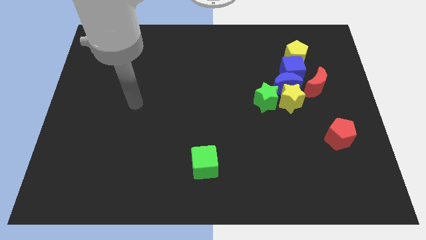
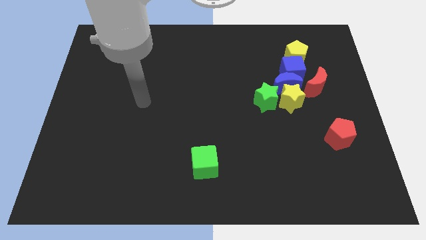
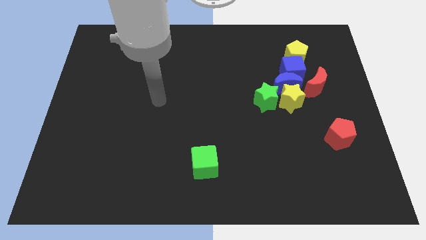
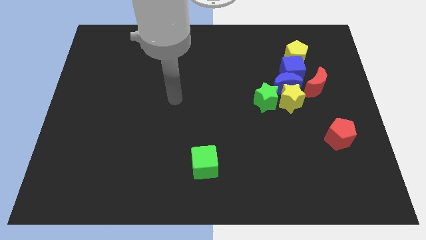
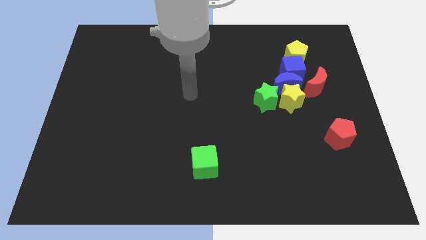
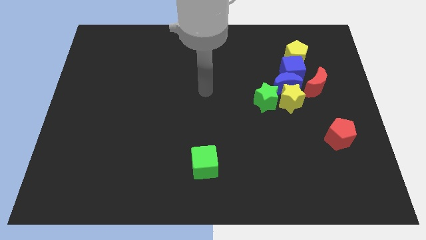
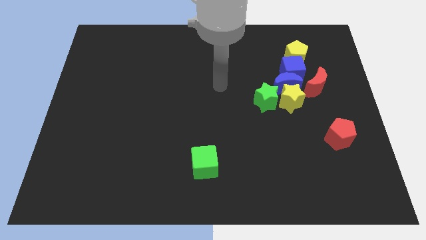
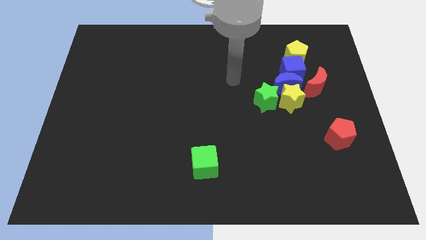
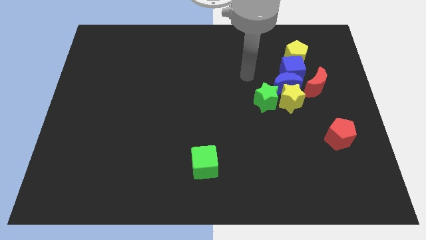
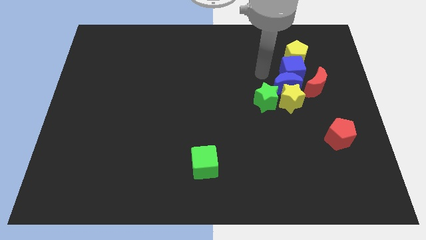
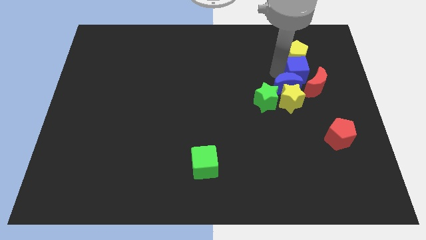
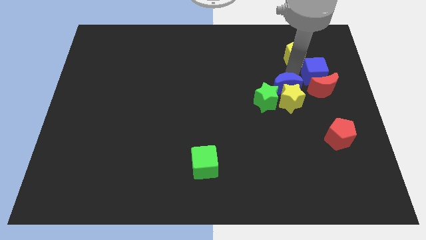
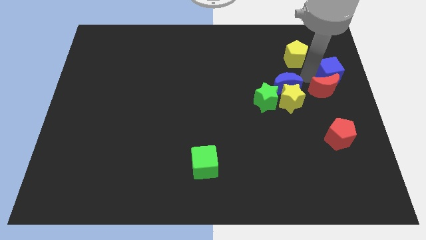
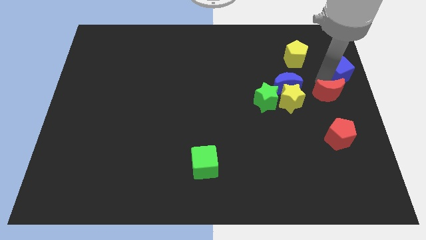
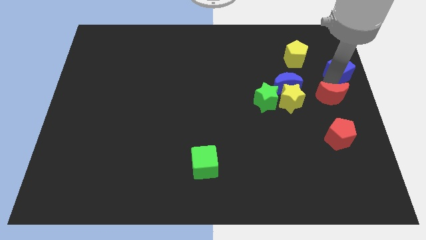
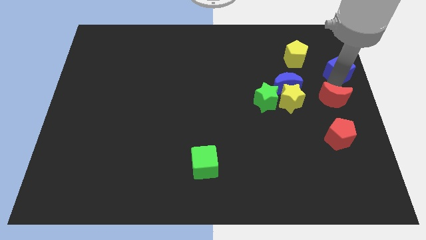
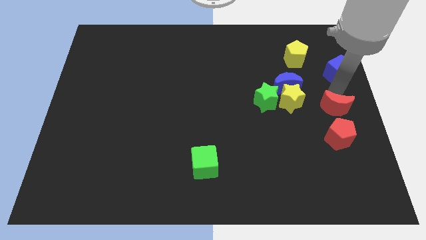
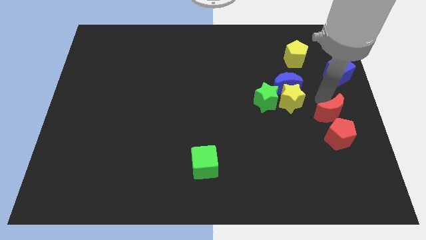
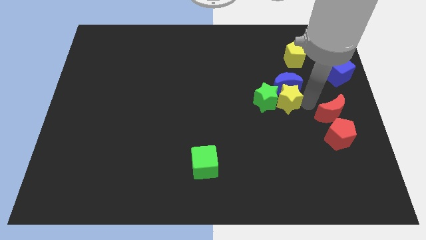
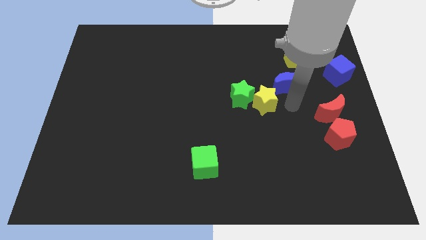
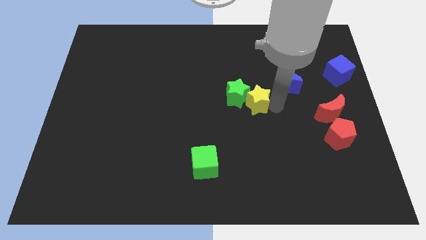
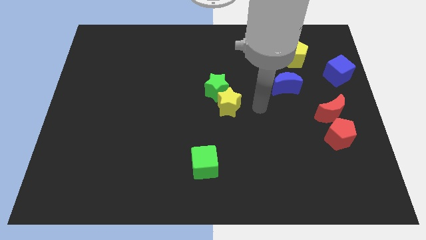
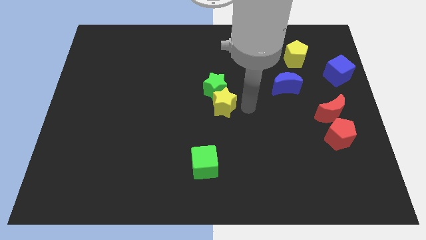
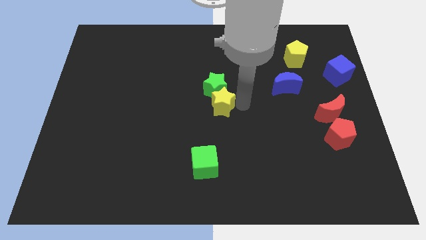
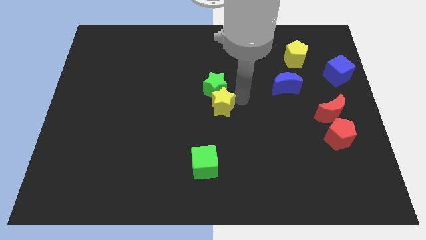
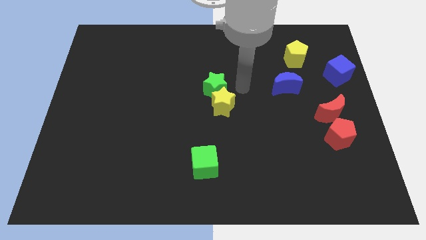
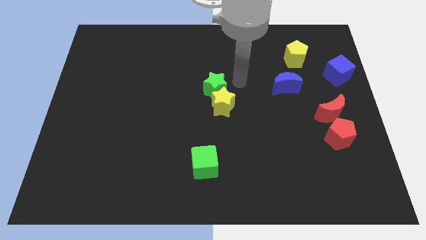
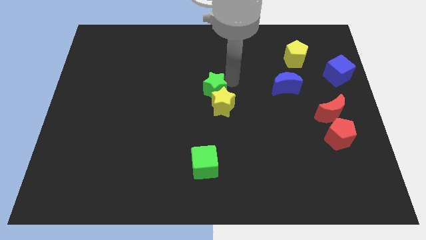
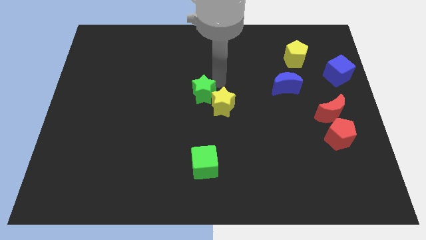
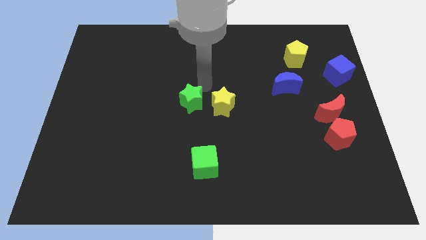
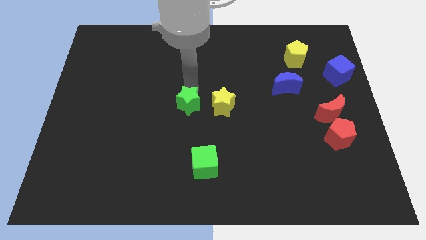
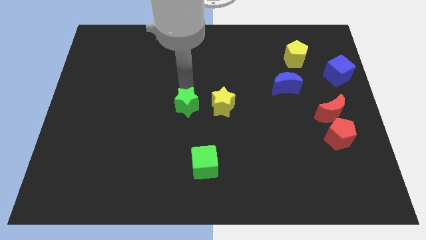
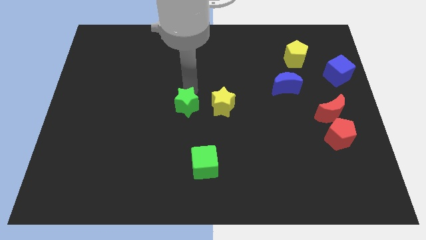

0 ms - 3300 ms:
push green star towards left side of yellow star

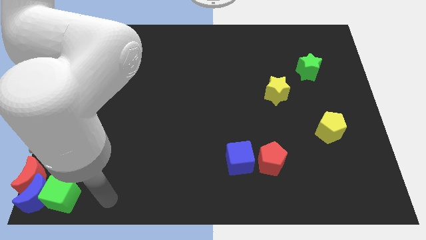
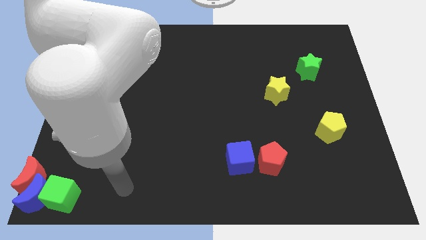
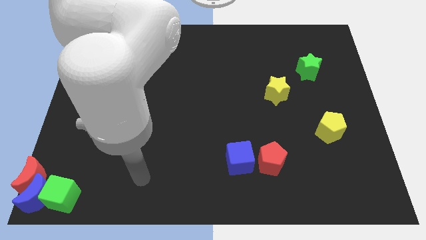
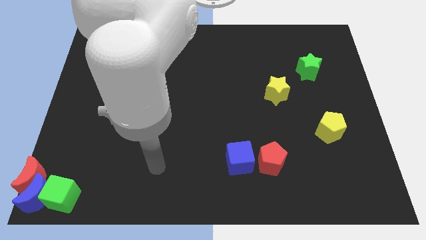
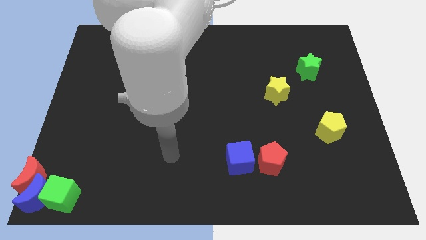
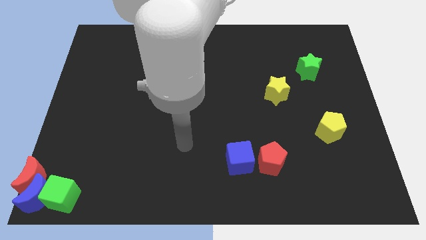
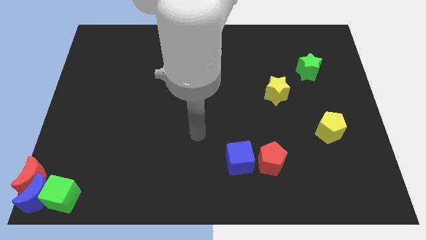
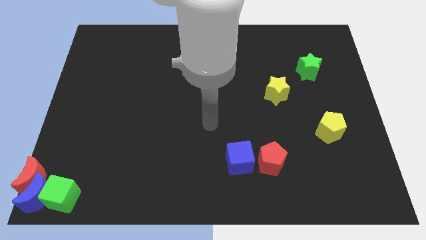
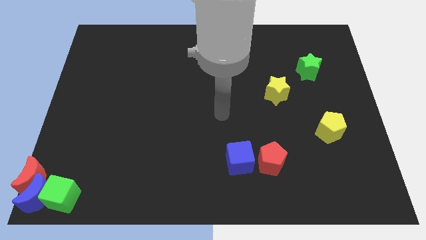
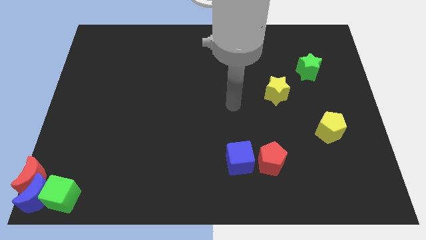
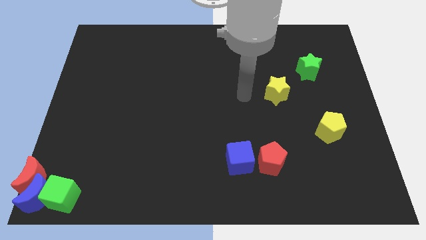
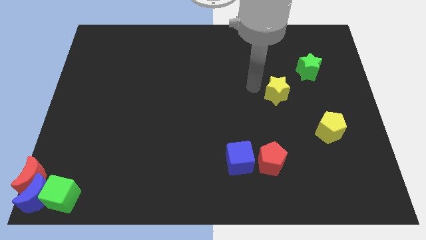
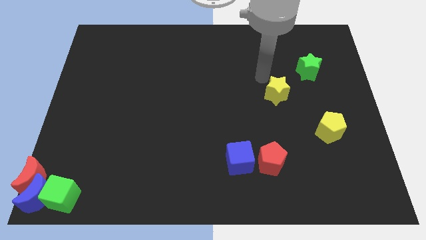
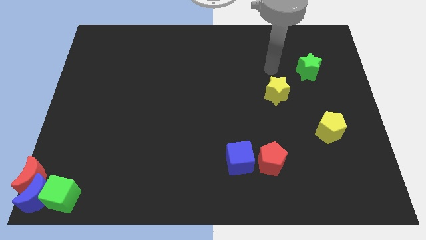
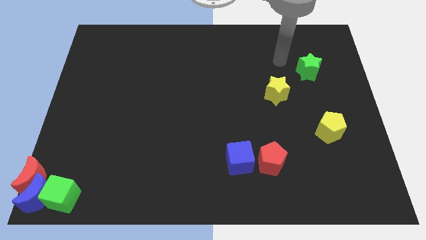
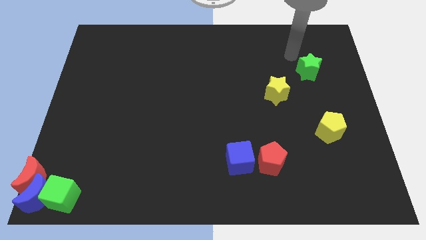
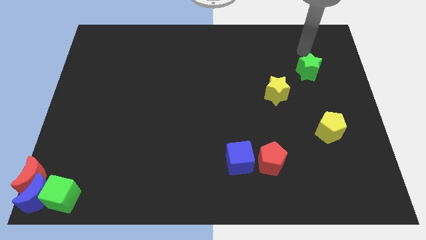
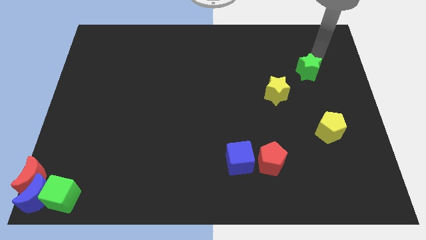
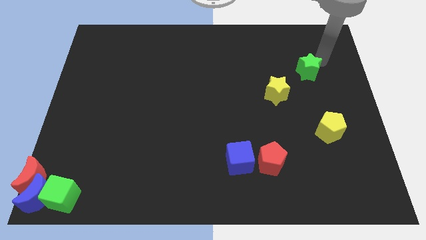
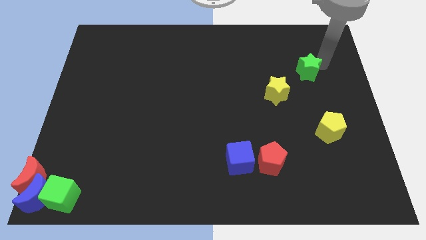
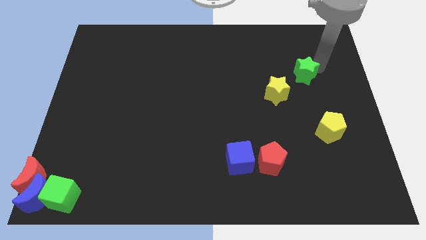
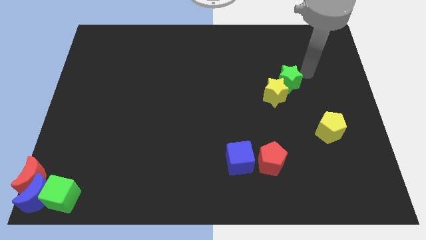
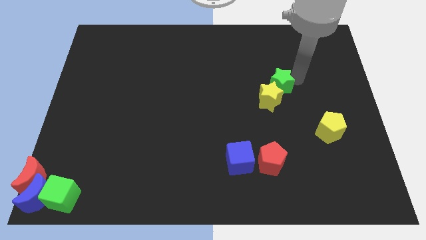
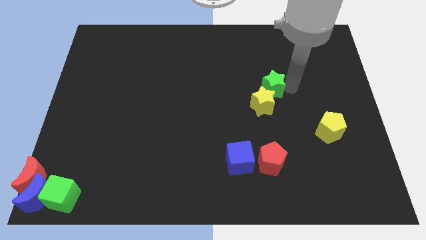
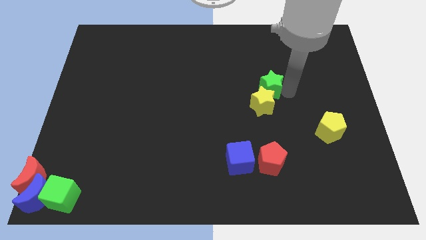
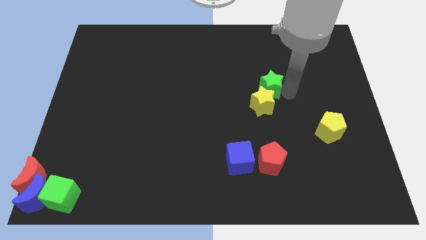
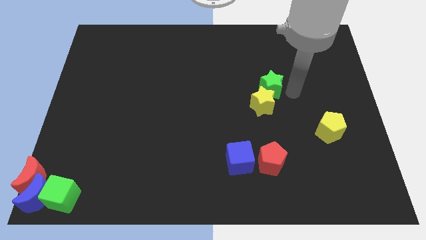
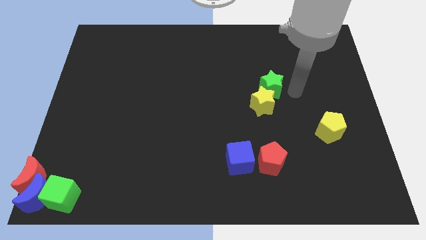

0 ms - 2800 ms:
move the green star into the yellow star

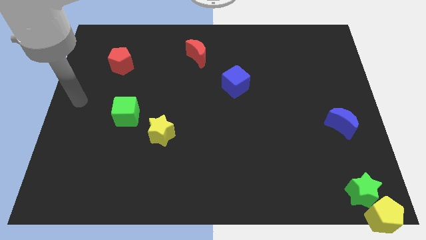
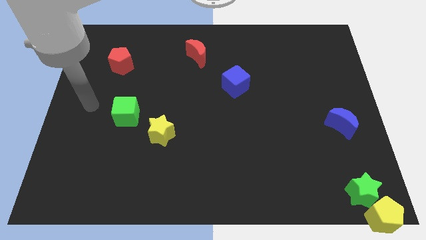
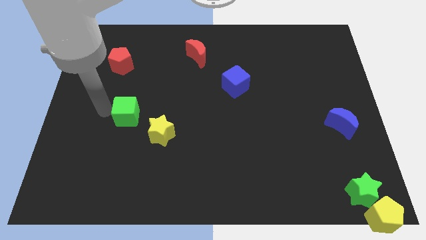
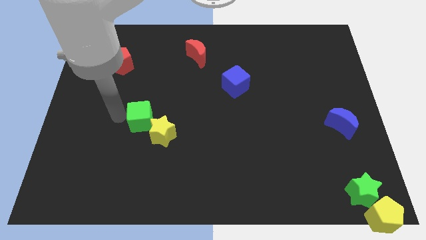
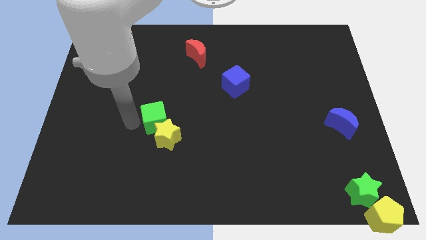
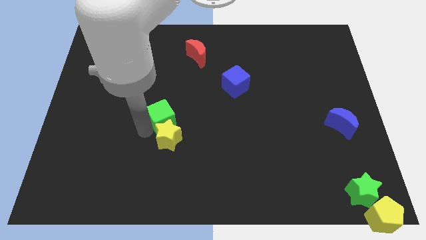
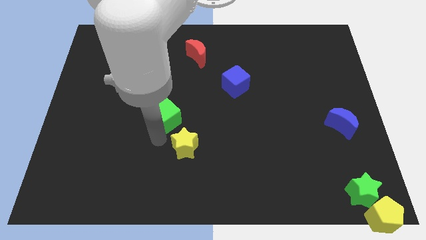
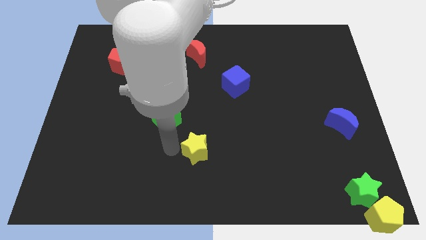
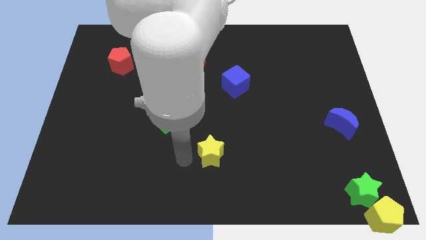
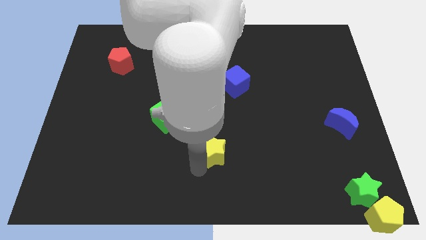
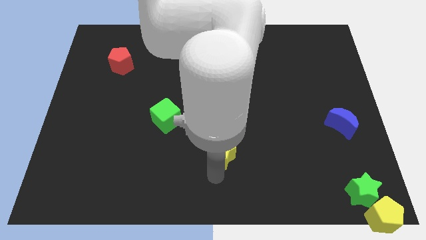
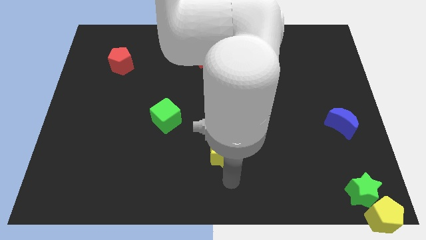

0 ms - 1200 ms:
separate yellow star from green cube

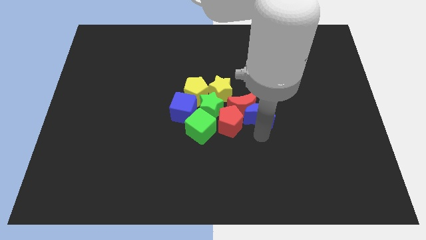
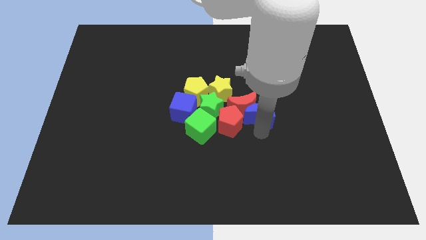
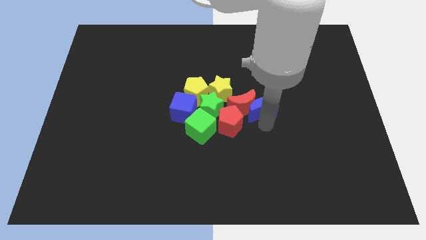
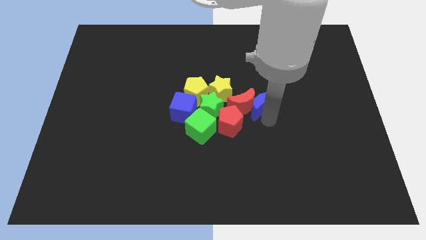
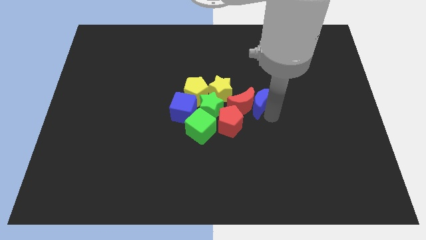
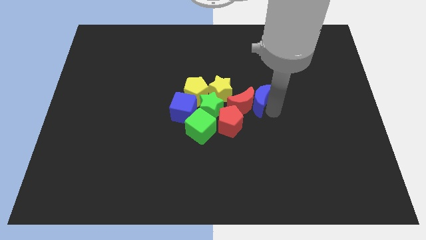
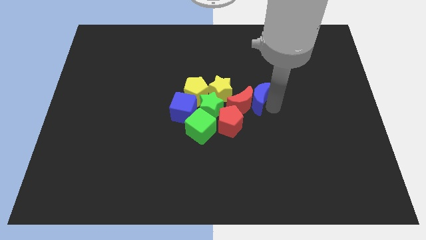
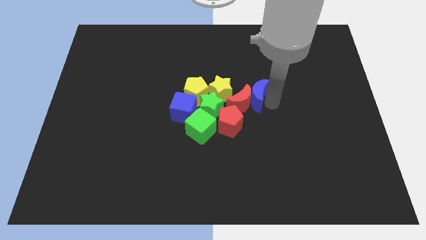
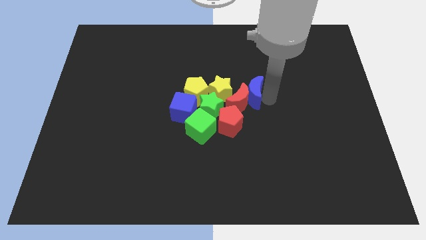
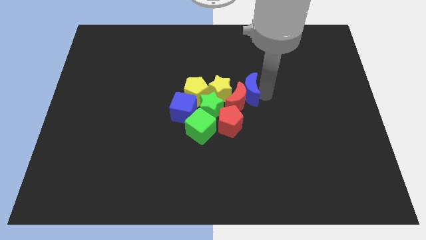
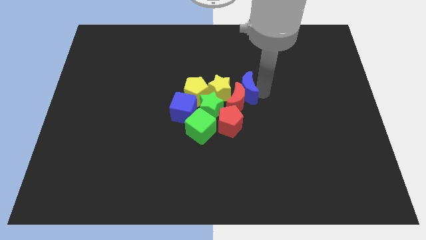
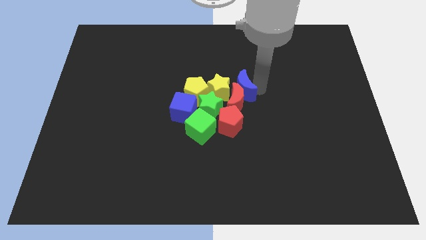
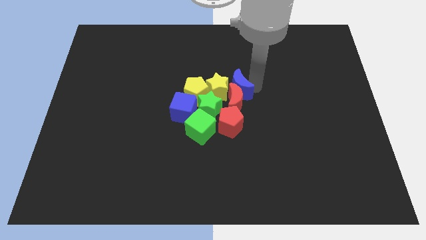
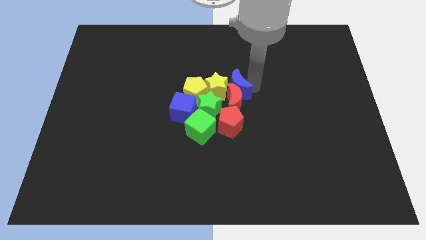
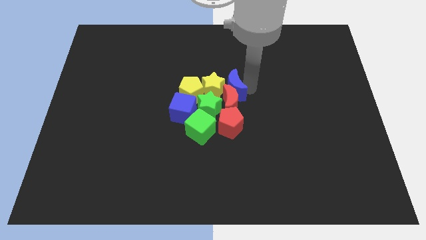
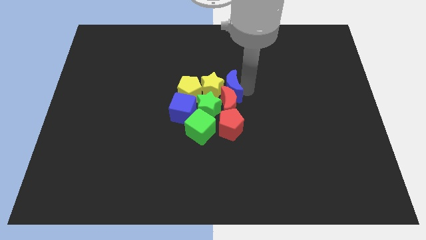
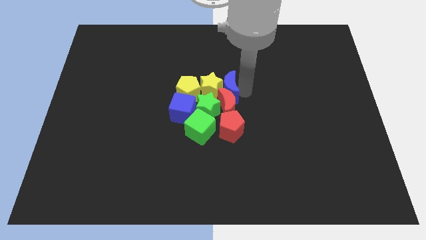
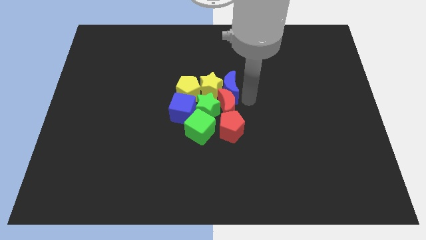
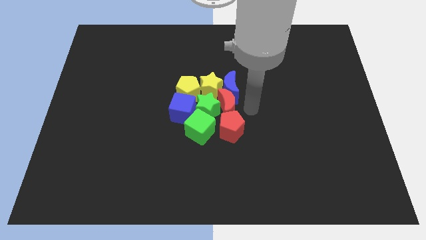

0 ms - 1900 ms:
push the blue moon upwards slightly
